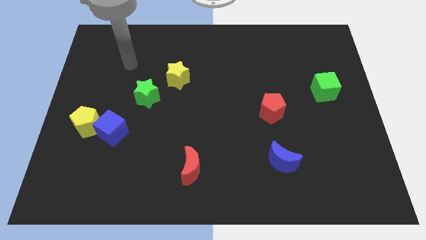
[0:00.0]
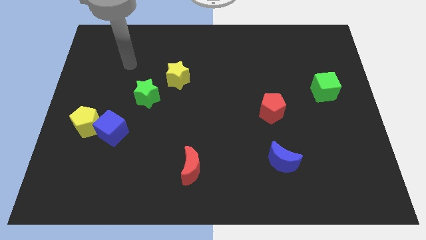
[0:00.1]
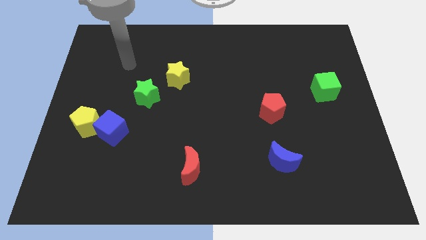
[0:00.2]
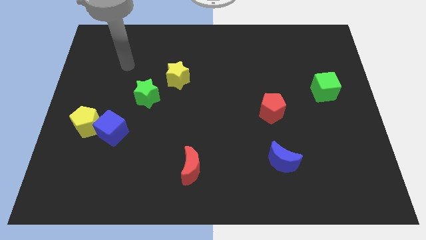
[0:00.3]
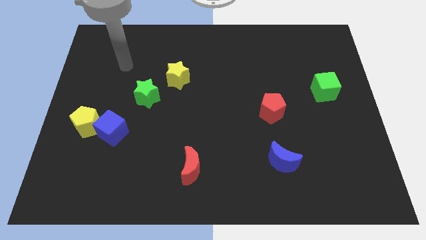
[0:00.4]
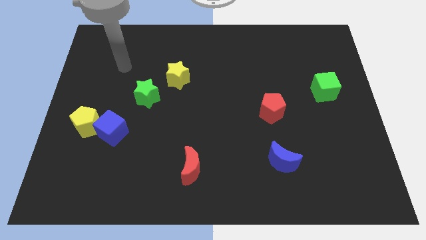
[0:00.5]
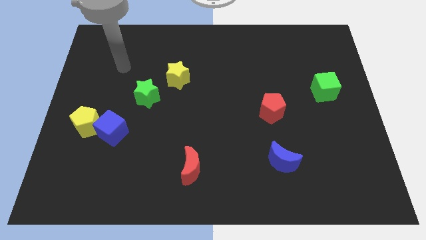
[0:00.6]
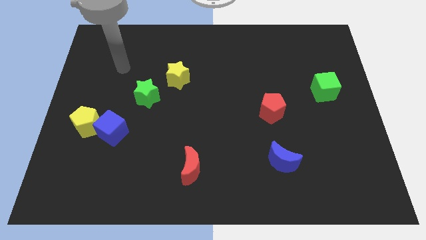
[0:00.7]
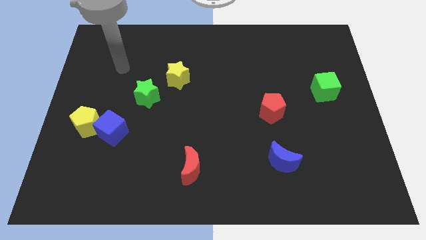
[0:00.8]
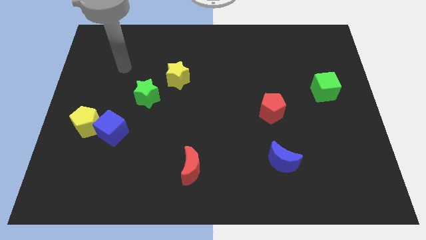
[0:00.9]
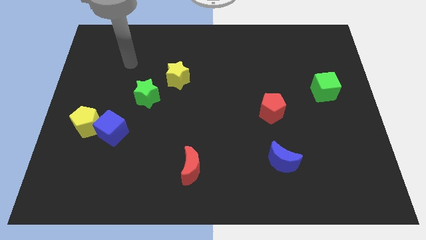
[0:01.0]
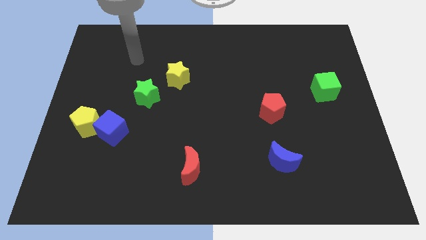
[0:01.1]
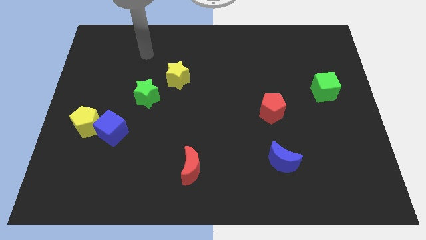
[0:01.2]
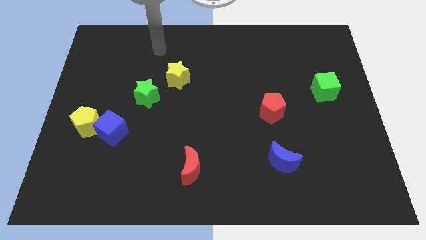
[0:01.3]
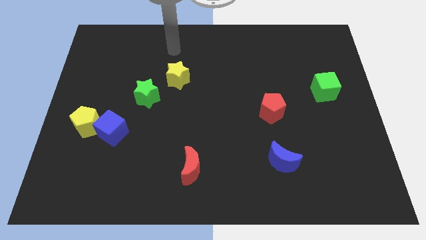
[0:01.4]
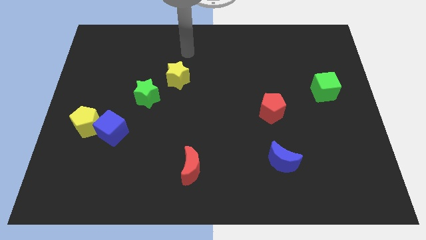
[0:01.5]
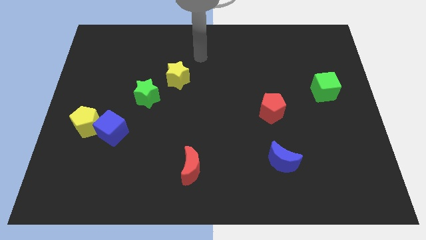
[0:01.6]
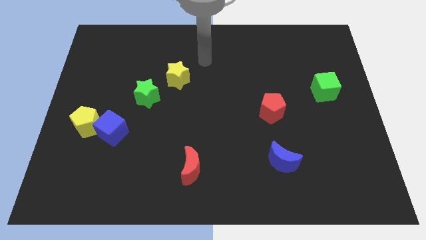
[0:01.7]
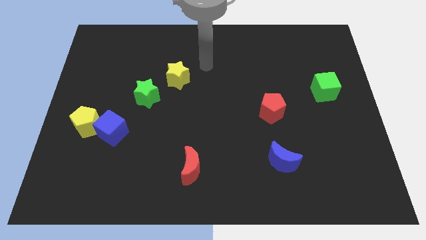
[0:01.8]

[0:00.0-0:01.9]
point your arm to the right yellow star

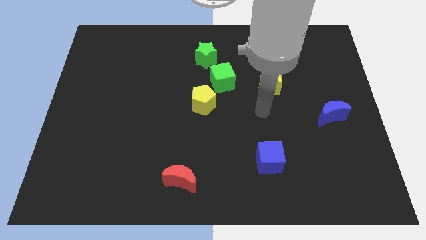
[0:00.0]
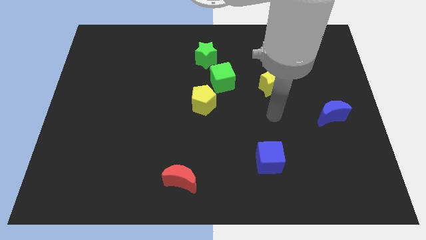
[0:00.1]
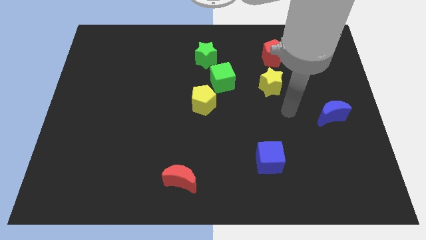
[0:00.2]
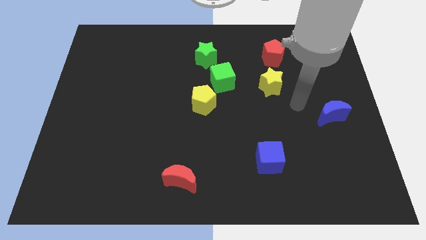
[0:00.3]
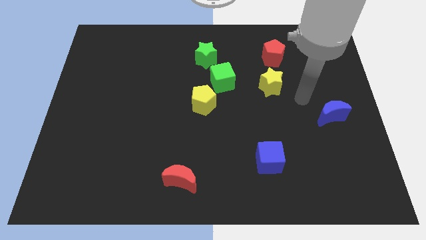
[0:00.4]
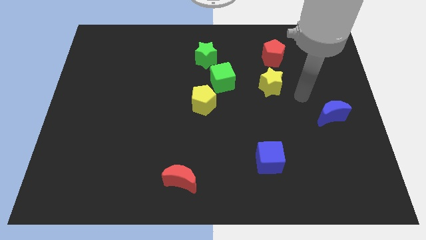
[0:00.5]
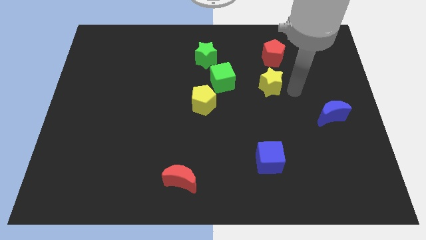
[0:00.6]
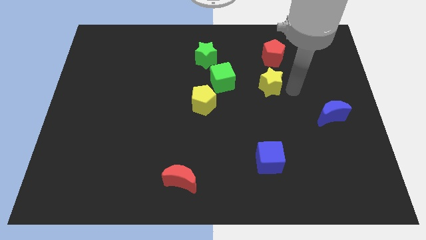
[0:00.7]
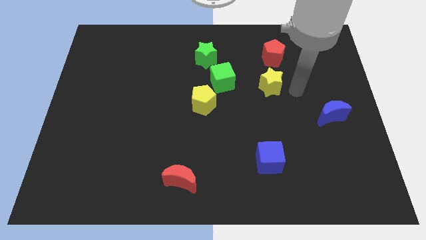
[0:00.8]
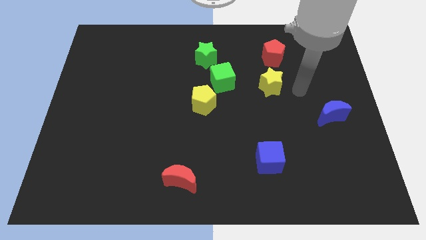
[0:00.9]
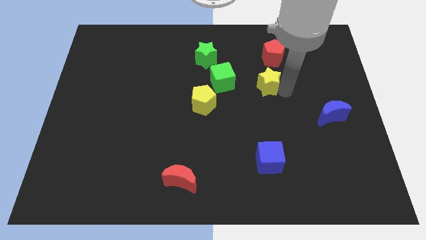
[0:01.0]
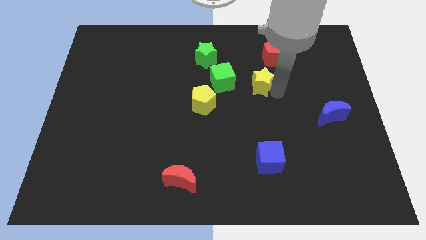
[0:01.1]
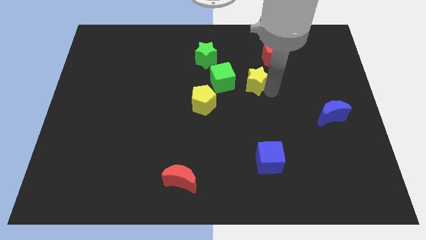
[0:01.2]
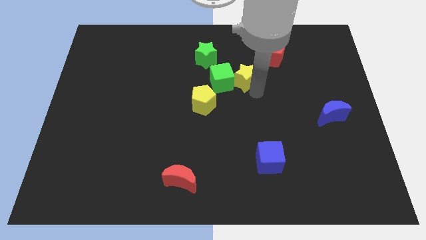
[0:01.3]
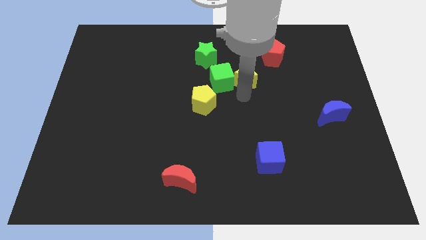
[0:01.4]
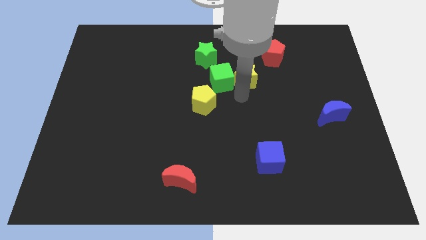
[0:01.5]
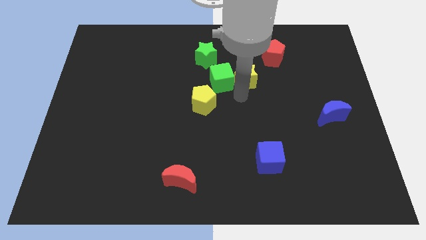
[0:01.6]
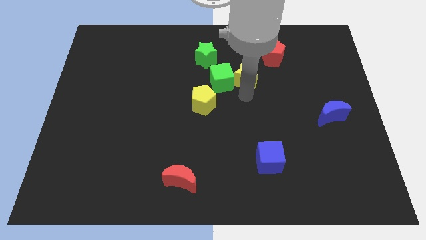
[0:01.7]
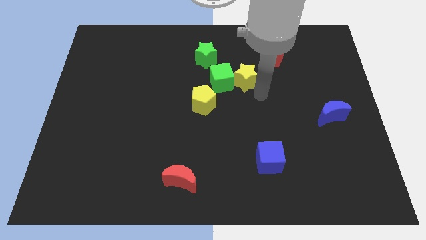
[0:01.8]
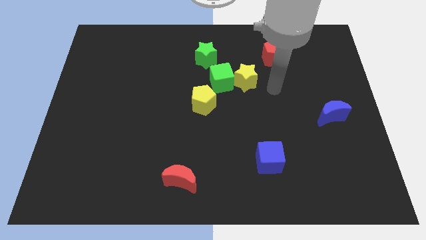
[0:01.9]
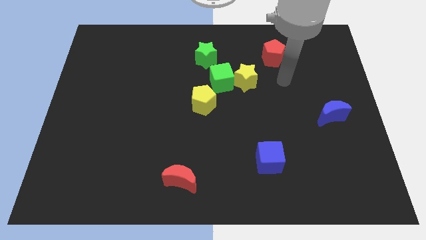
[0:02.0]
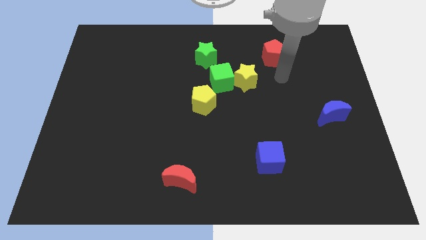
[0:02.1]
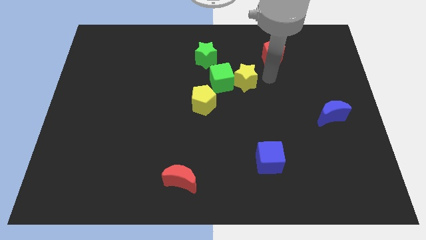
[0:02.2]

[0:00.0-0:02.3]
push the yellow star into the green cube to the right

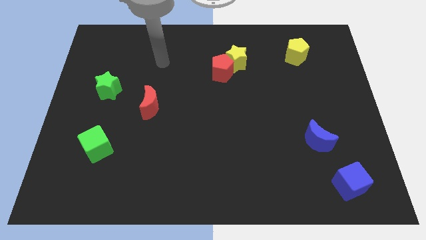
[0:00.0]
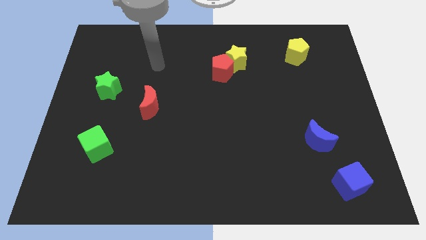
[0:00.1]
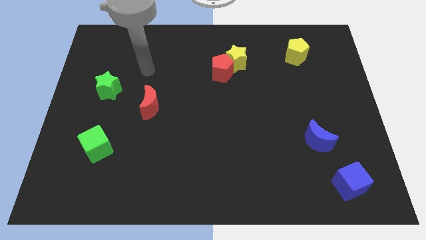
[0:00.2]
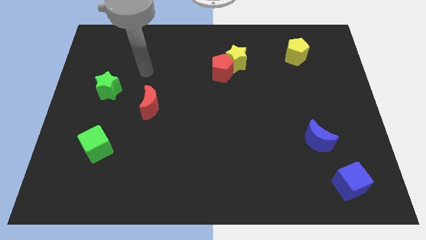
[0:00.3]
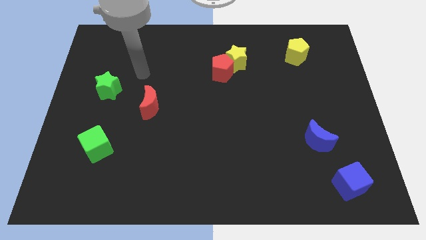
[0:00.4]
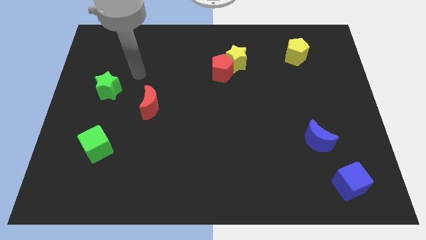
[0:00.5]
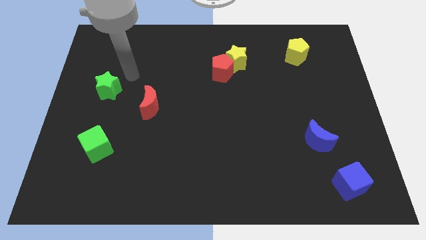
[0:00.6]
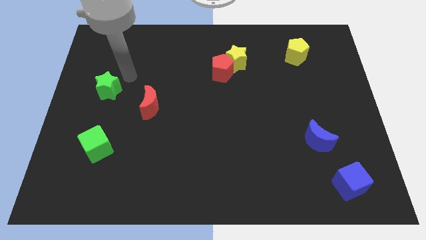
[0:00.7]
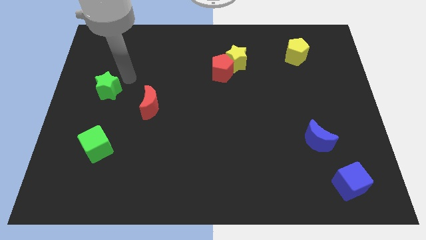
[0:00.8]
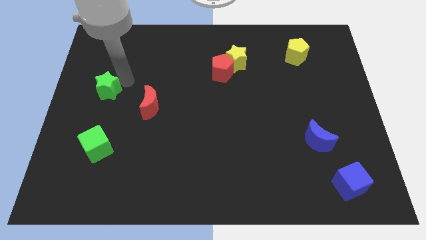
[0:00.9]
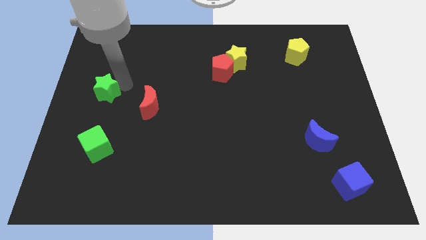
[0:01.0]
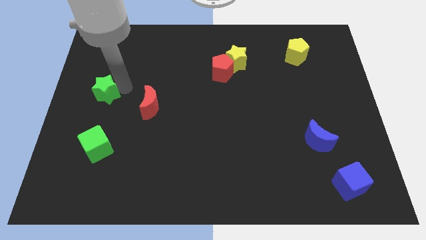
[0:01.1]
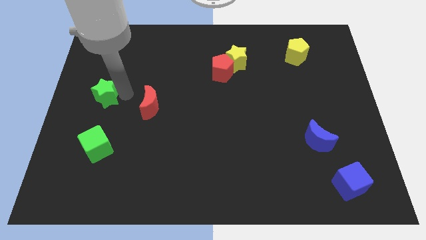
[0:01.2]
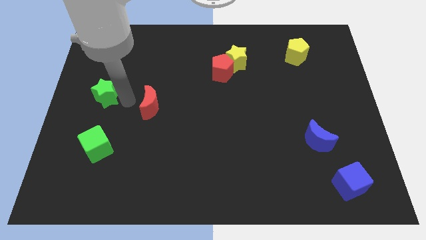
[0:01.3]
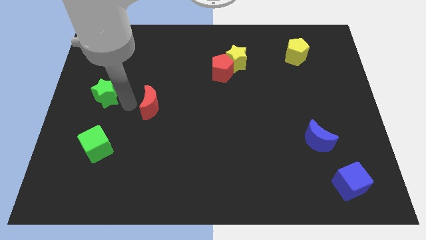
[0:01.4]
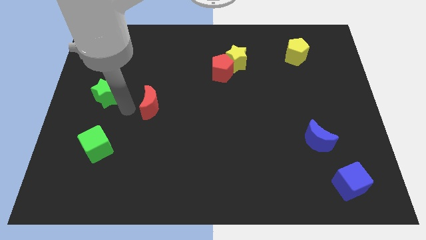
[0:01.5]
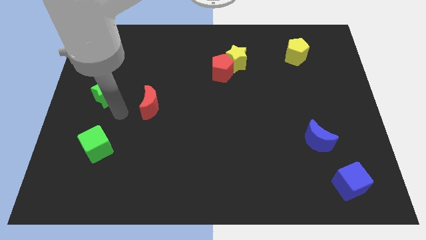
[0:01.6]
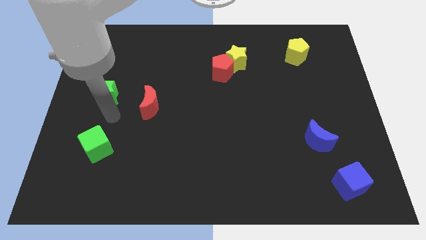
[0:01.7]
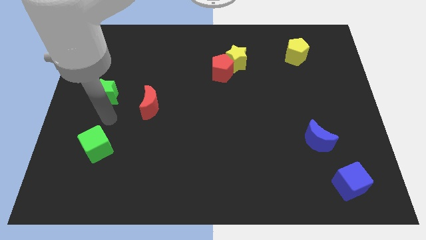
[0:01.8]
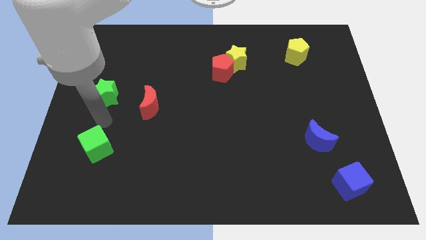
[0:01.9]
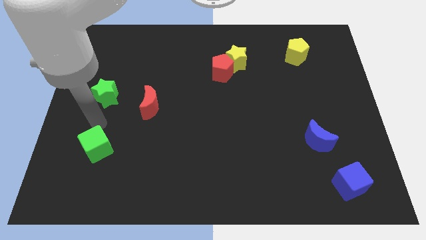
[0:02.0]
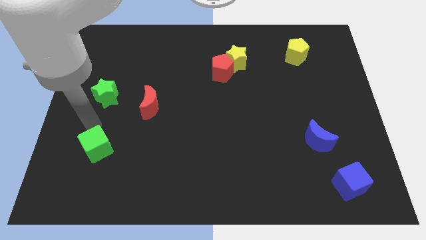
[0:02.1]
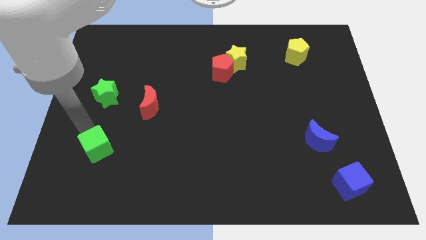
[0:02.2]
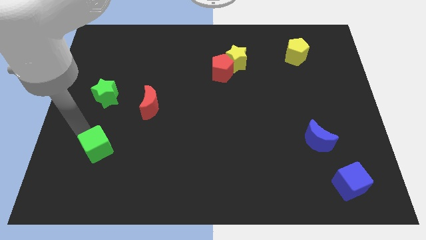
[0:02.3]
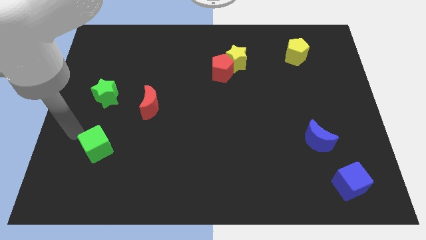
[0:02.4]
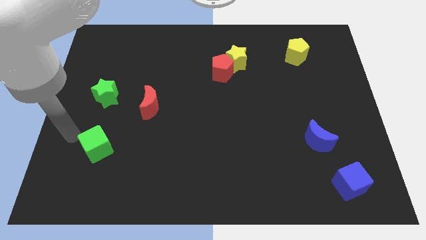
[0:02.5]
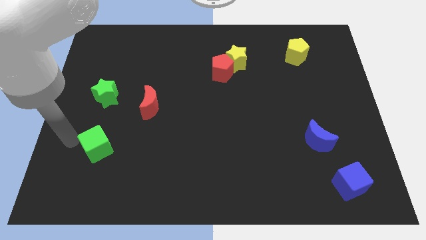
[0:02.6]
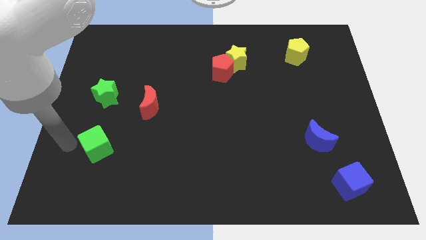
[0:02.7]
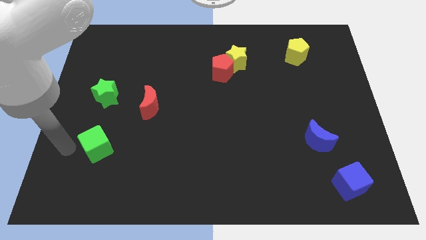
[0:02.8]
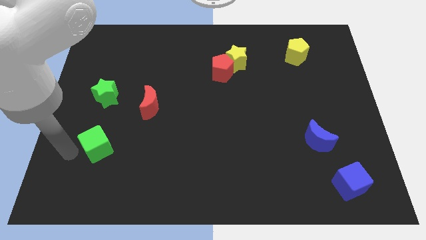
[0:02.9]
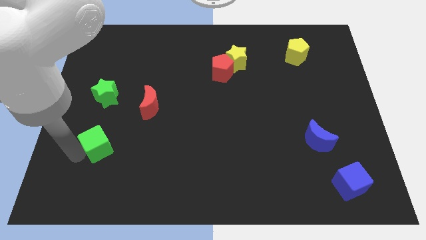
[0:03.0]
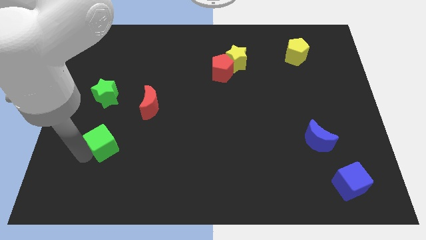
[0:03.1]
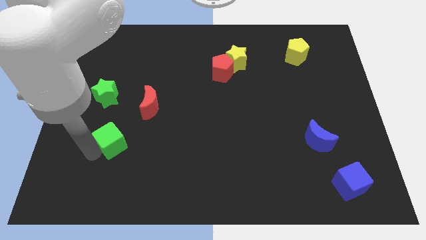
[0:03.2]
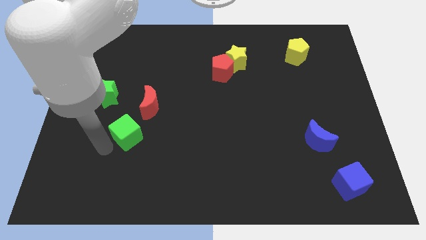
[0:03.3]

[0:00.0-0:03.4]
push the green cube close to the red moon

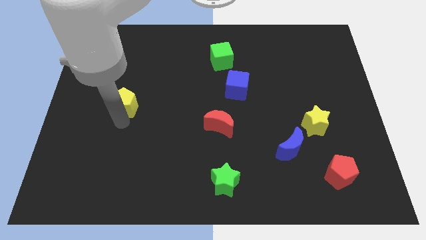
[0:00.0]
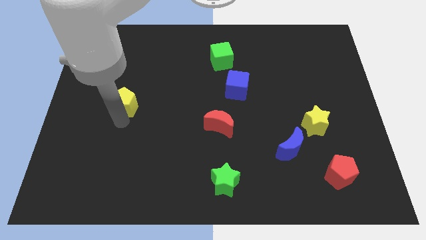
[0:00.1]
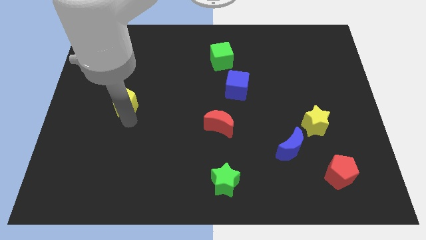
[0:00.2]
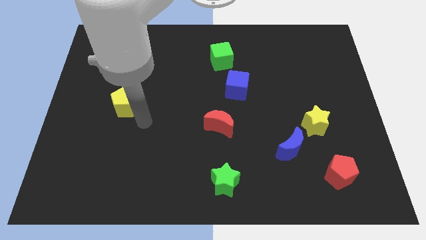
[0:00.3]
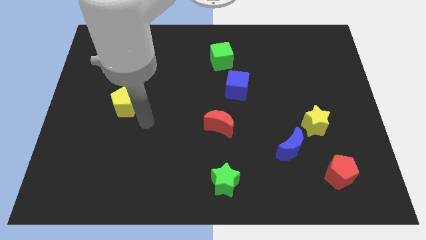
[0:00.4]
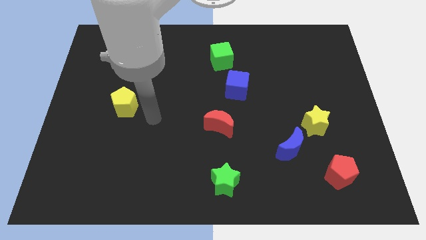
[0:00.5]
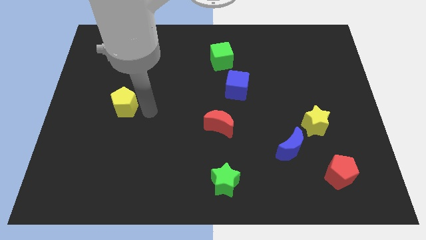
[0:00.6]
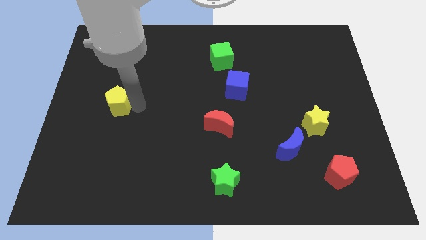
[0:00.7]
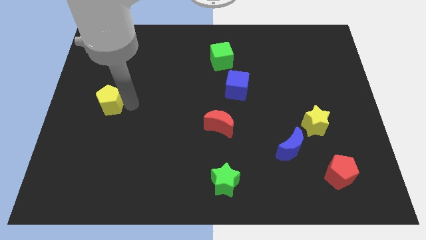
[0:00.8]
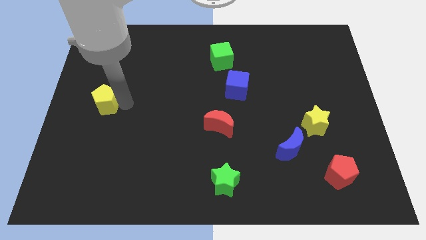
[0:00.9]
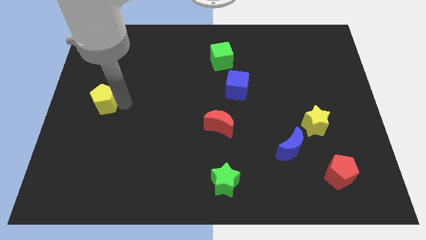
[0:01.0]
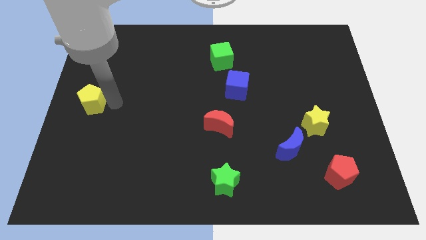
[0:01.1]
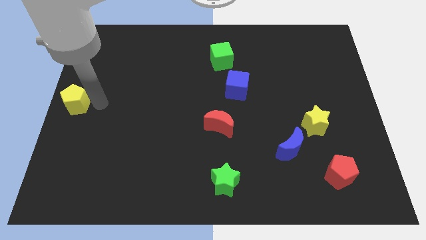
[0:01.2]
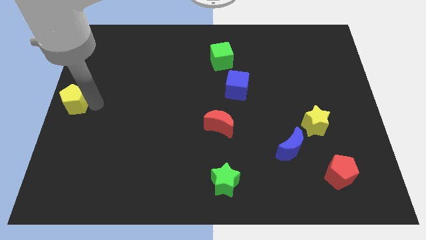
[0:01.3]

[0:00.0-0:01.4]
drag the yellow pentagon at the center left
